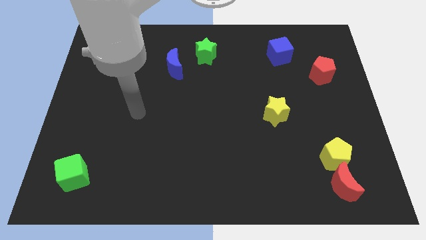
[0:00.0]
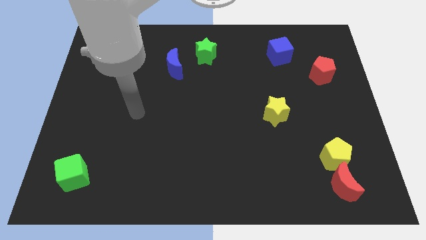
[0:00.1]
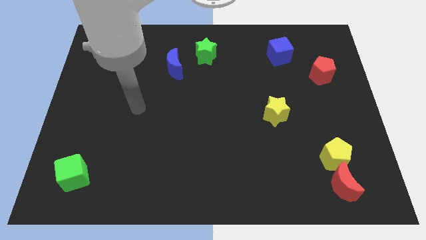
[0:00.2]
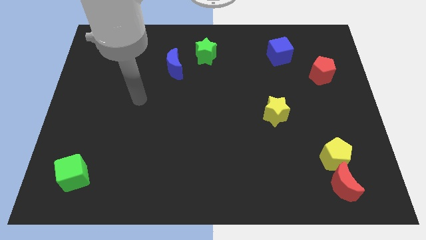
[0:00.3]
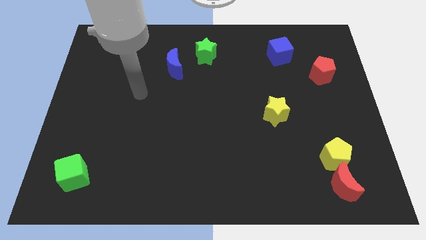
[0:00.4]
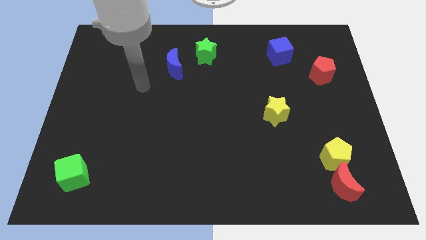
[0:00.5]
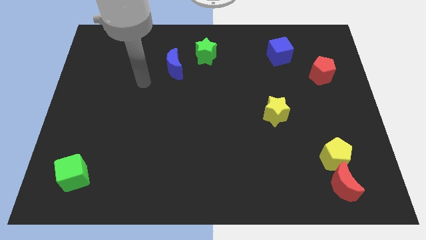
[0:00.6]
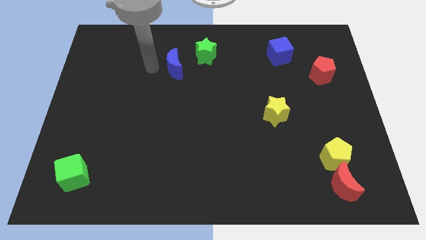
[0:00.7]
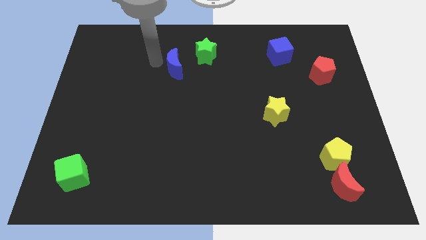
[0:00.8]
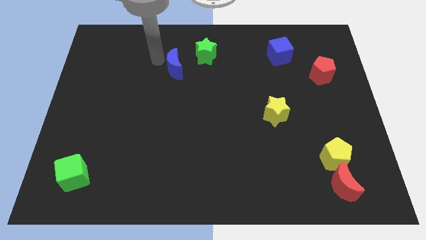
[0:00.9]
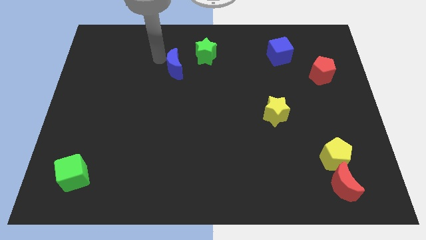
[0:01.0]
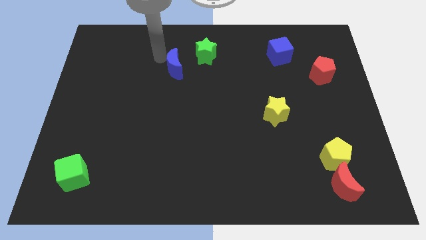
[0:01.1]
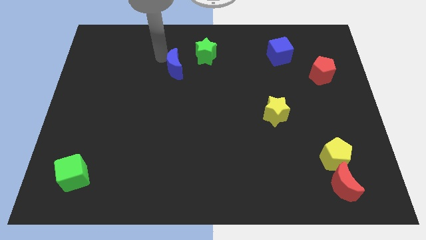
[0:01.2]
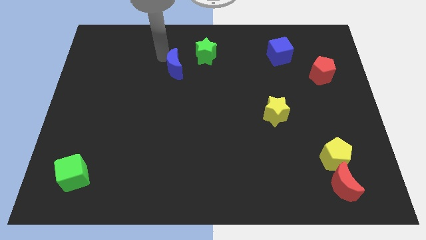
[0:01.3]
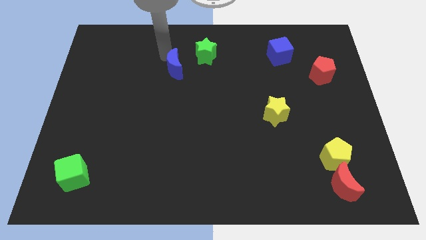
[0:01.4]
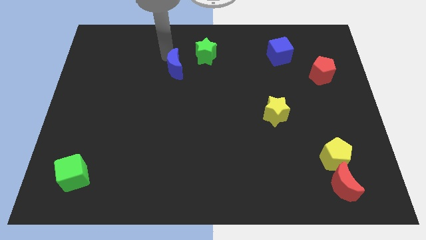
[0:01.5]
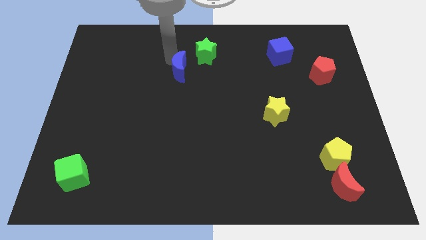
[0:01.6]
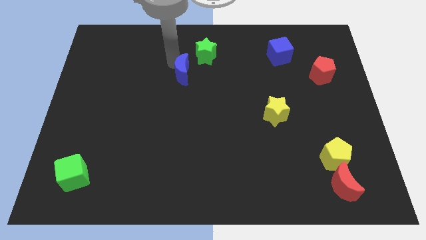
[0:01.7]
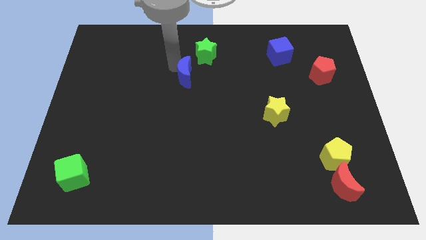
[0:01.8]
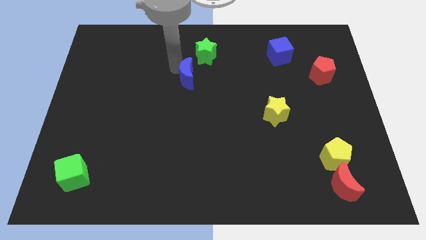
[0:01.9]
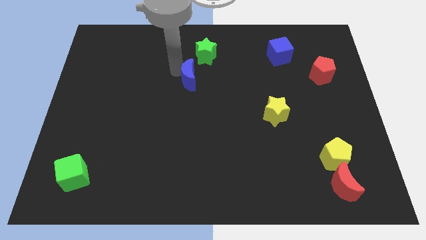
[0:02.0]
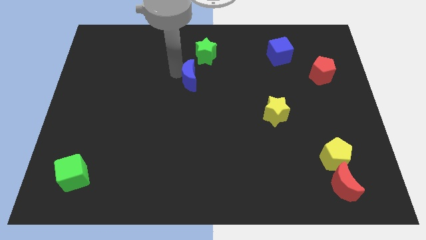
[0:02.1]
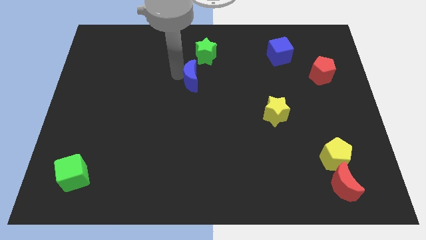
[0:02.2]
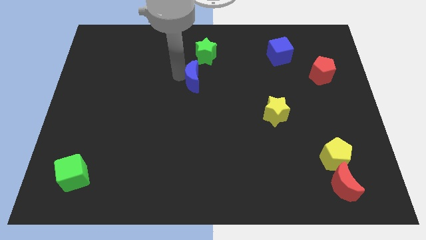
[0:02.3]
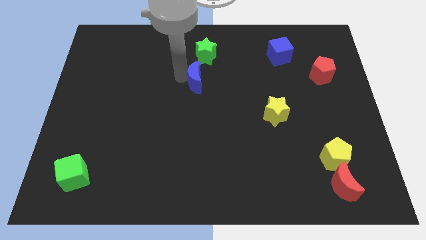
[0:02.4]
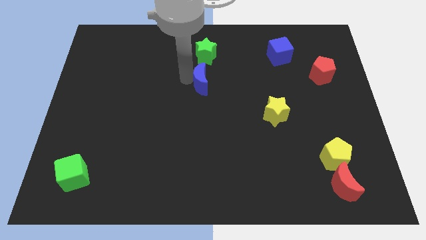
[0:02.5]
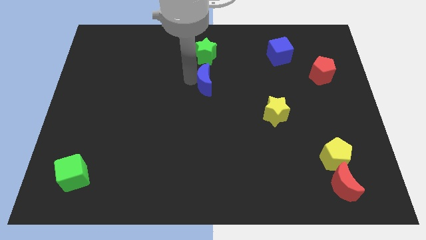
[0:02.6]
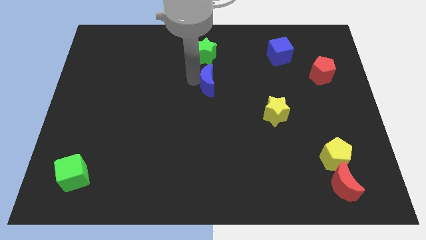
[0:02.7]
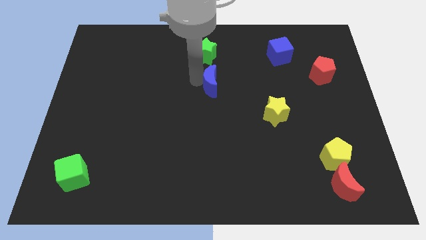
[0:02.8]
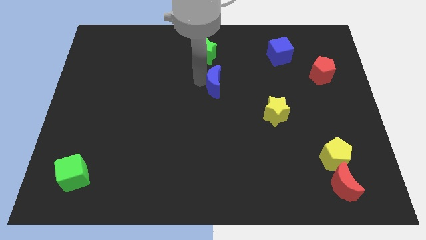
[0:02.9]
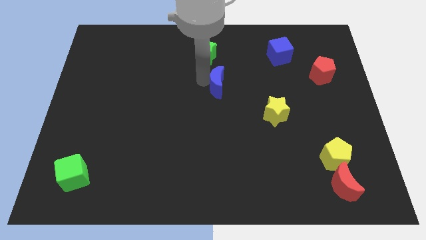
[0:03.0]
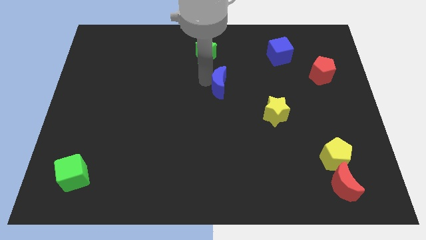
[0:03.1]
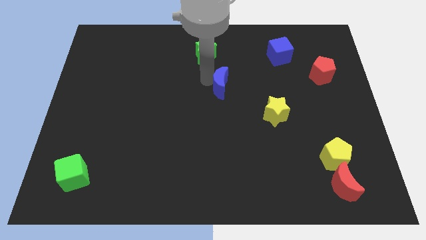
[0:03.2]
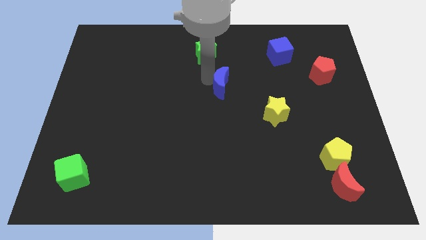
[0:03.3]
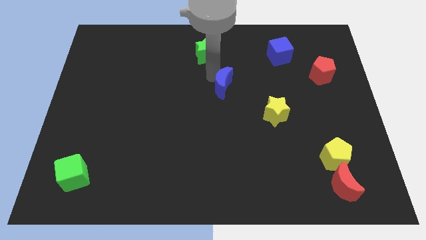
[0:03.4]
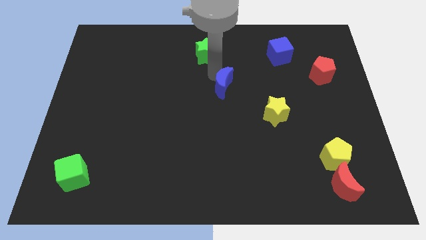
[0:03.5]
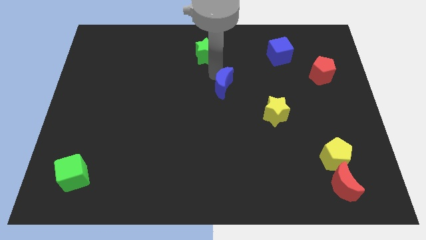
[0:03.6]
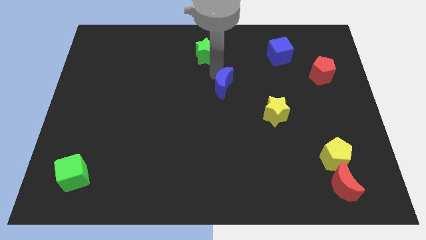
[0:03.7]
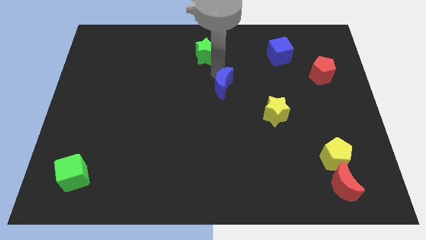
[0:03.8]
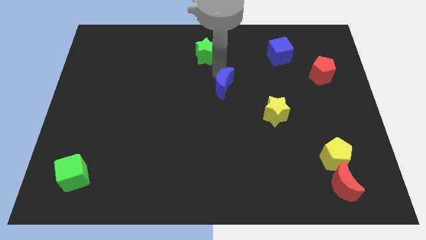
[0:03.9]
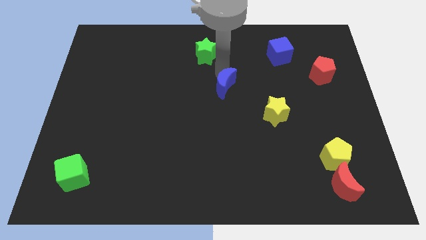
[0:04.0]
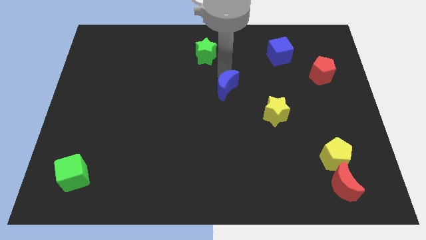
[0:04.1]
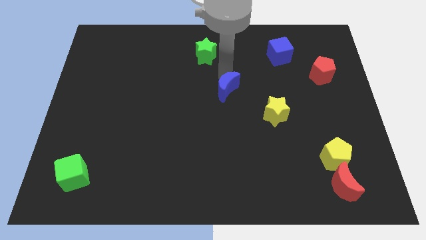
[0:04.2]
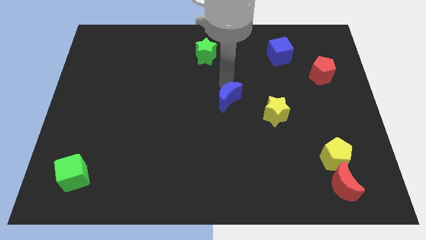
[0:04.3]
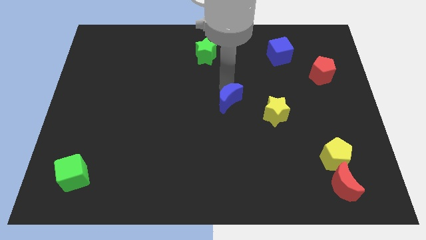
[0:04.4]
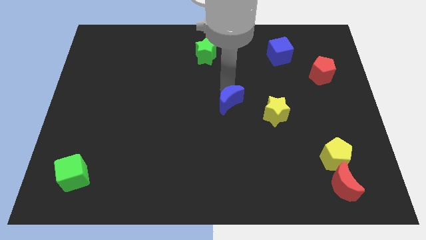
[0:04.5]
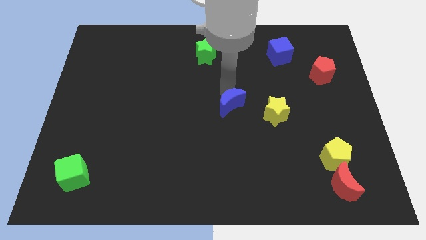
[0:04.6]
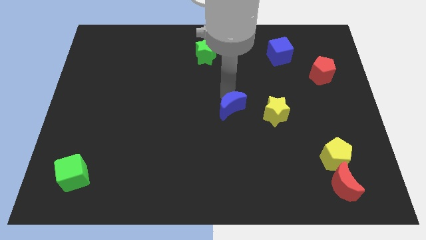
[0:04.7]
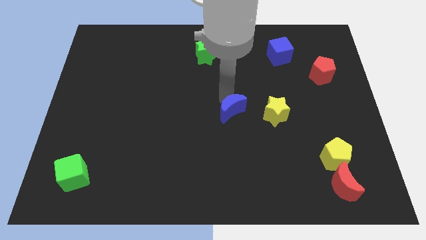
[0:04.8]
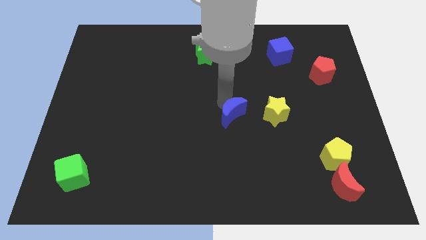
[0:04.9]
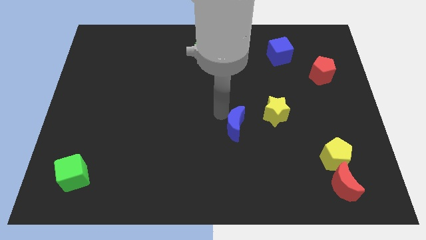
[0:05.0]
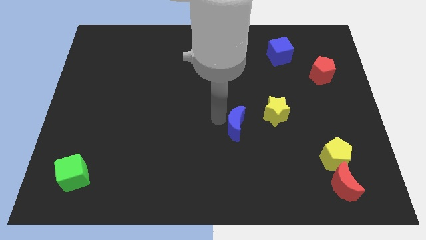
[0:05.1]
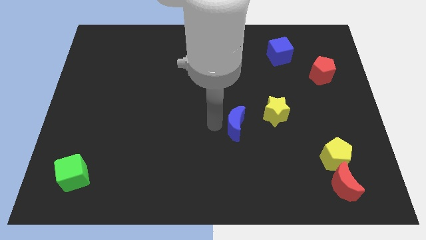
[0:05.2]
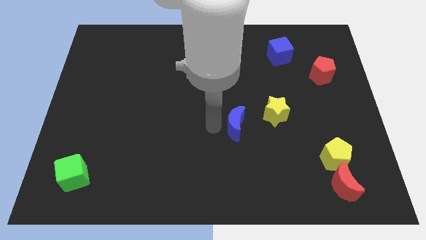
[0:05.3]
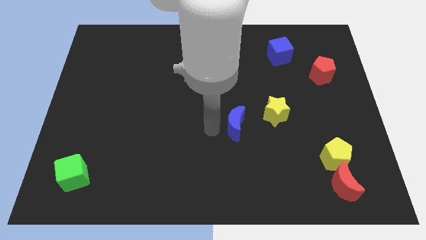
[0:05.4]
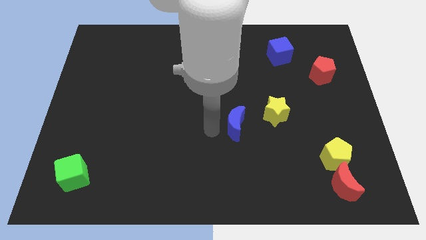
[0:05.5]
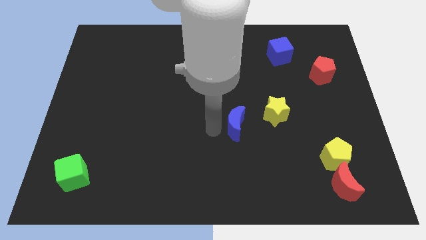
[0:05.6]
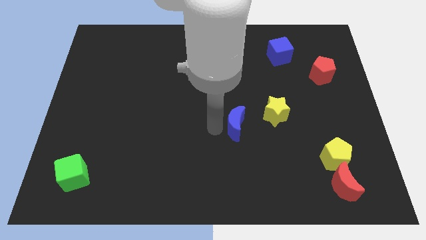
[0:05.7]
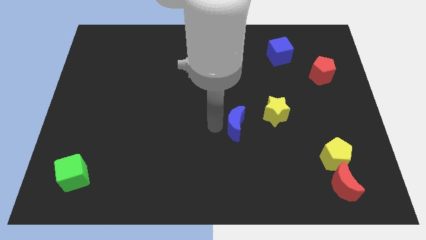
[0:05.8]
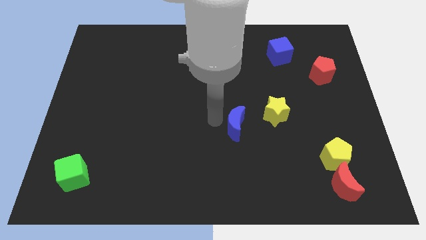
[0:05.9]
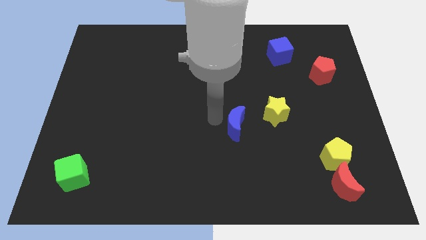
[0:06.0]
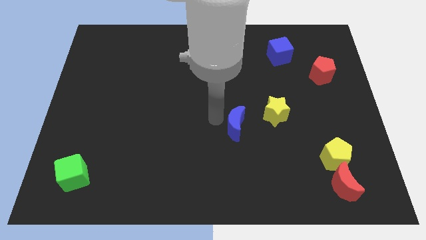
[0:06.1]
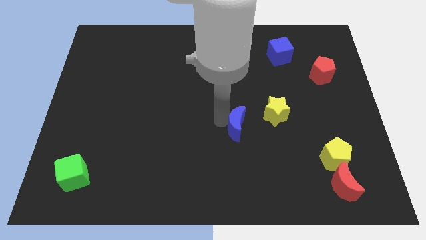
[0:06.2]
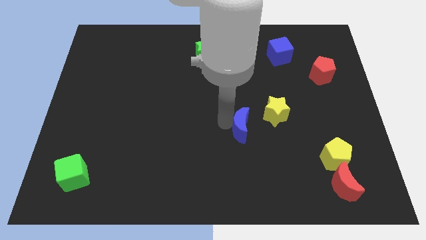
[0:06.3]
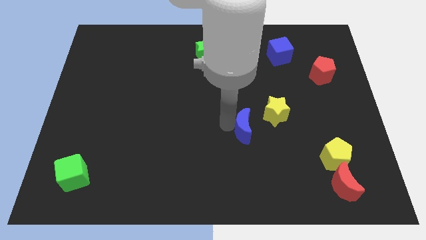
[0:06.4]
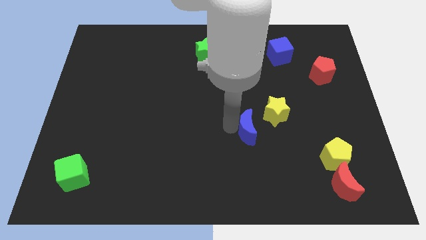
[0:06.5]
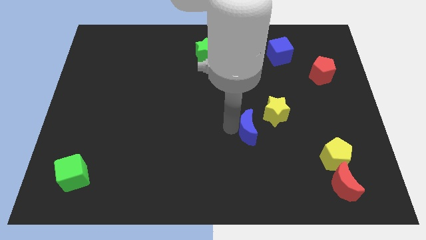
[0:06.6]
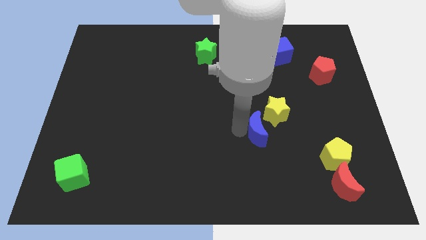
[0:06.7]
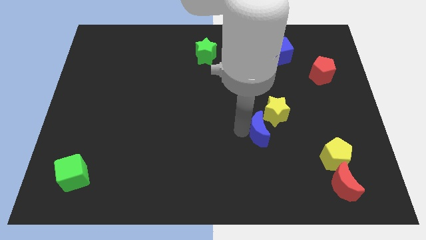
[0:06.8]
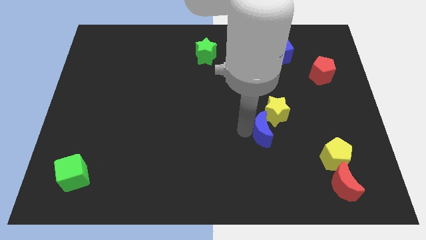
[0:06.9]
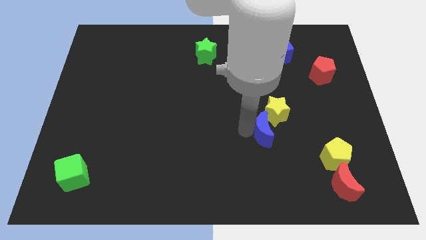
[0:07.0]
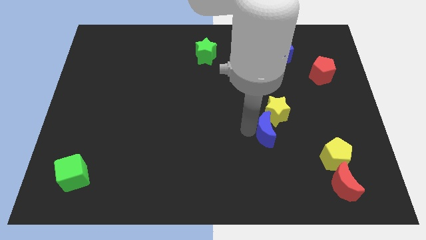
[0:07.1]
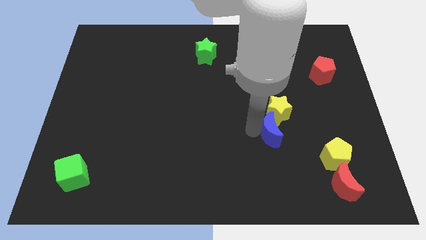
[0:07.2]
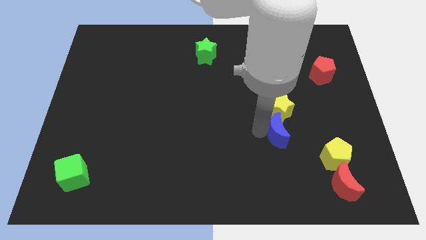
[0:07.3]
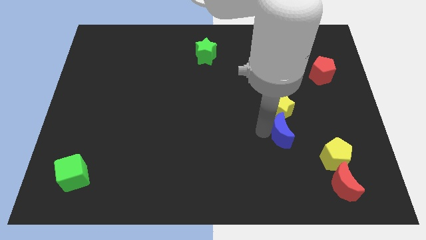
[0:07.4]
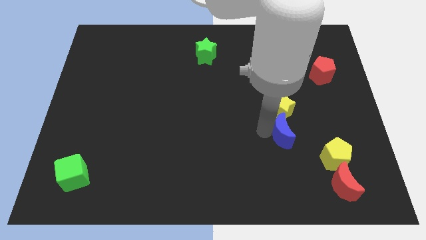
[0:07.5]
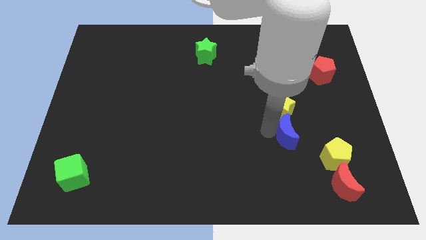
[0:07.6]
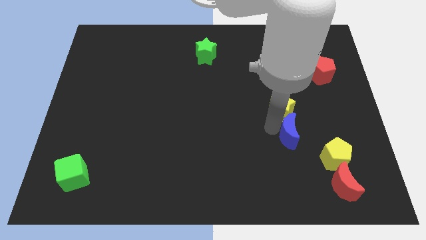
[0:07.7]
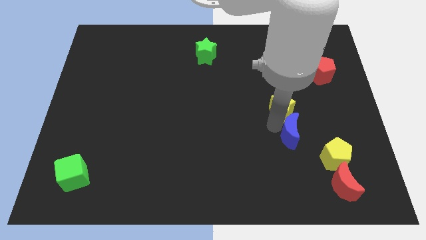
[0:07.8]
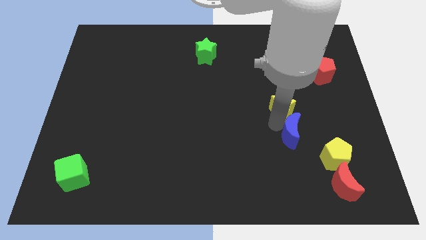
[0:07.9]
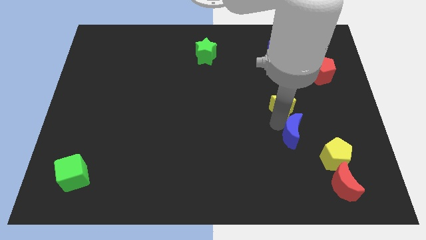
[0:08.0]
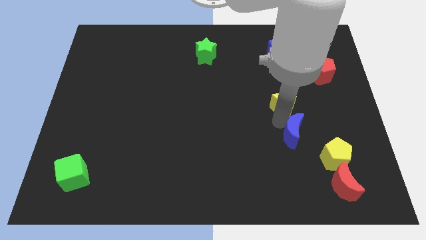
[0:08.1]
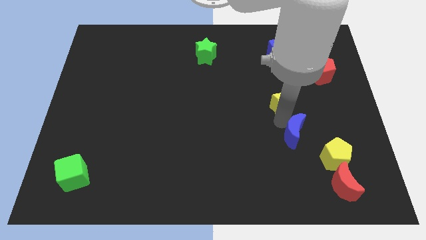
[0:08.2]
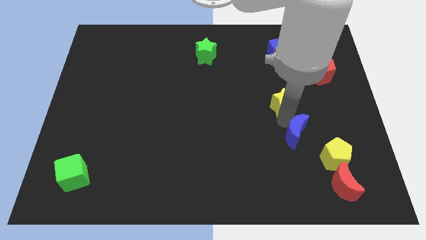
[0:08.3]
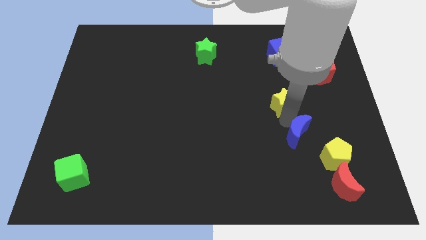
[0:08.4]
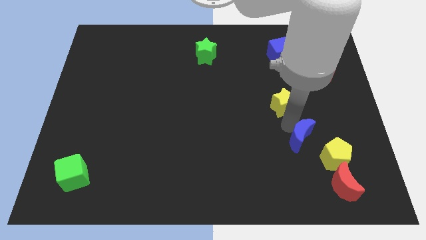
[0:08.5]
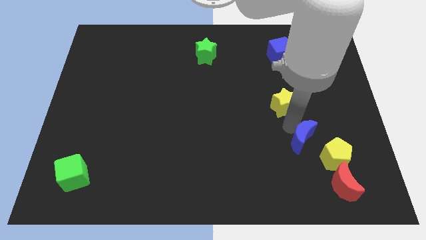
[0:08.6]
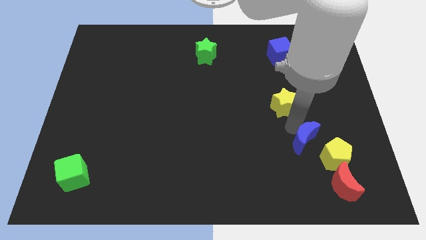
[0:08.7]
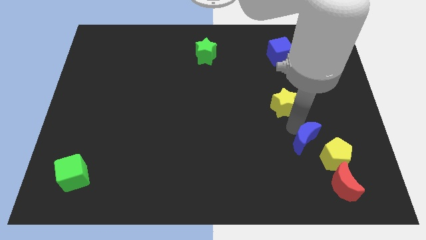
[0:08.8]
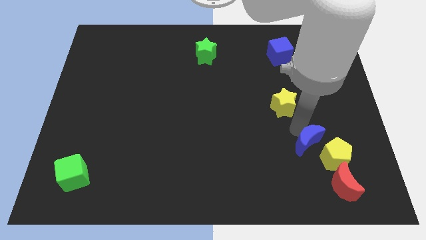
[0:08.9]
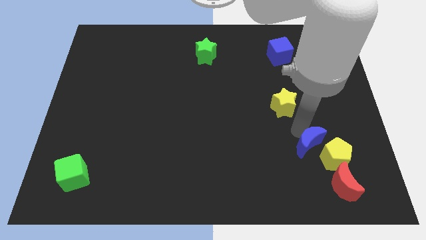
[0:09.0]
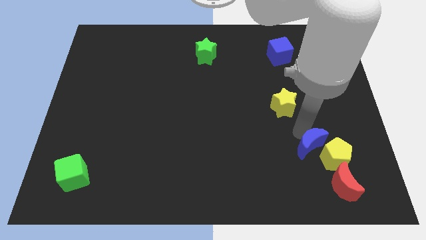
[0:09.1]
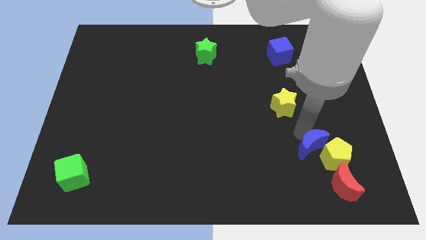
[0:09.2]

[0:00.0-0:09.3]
push the blue moon close to the yellow pentagon
